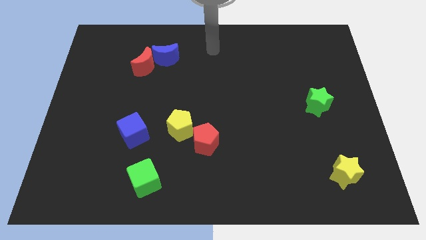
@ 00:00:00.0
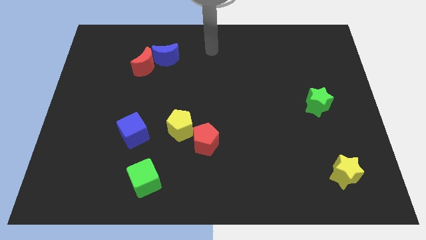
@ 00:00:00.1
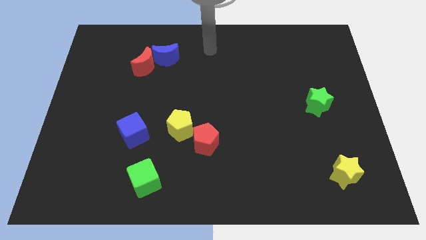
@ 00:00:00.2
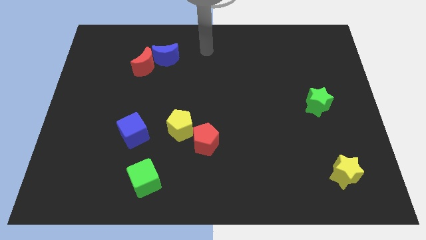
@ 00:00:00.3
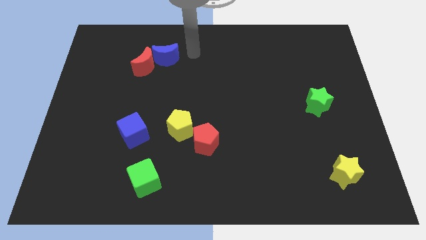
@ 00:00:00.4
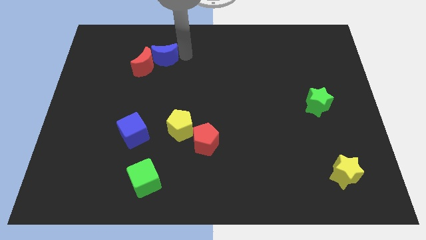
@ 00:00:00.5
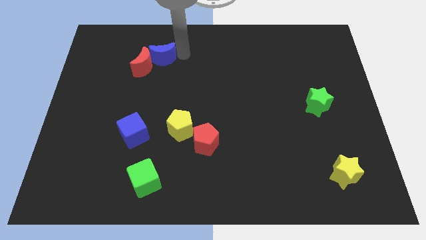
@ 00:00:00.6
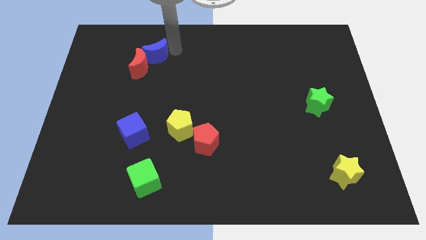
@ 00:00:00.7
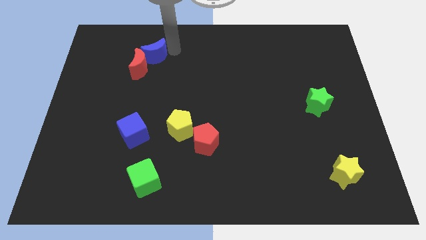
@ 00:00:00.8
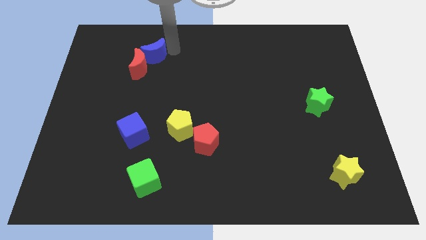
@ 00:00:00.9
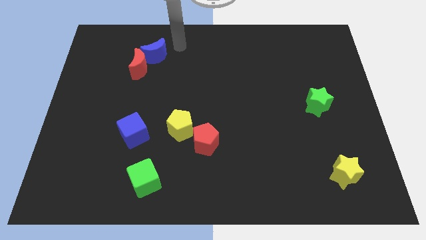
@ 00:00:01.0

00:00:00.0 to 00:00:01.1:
push the blue crescent into the red crescent

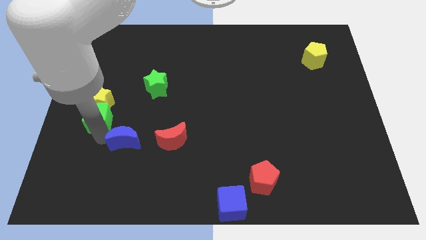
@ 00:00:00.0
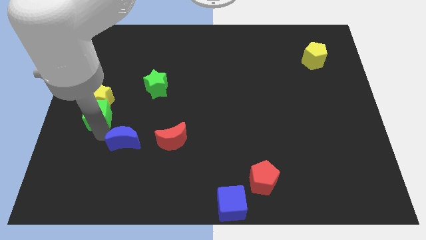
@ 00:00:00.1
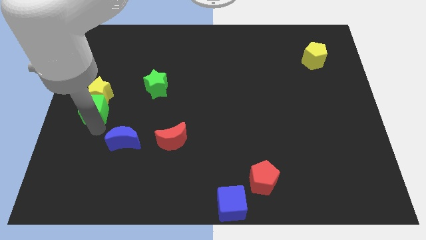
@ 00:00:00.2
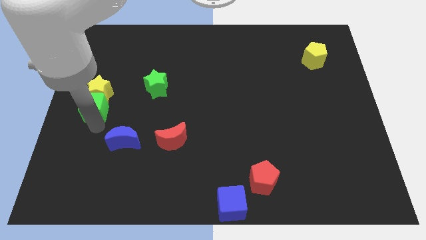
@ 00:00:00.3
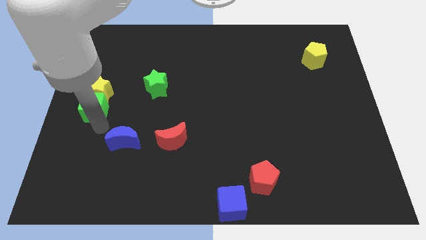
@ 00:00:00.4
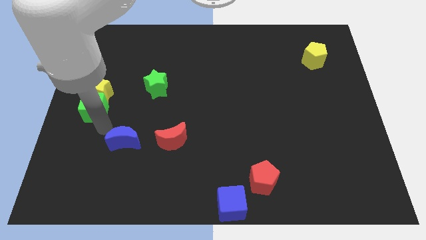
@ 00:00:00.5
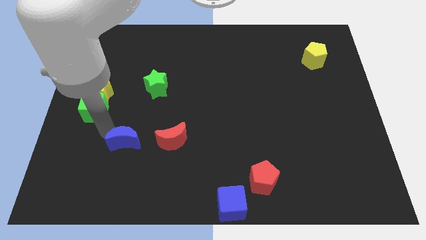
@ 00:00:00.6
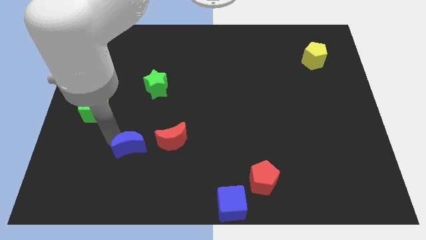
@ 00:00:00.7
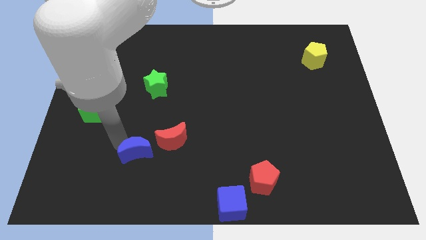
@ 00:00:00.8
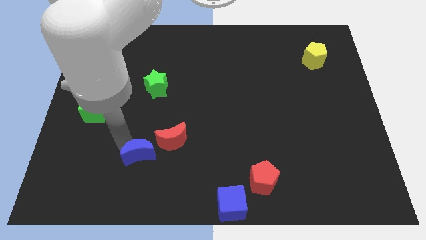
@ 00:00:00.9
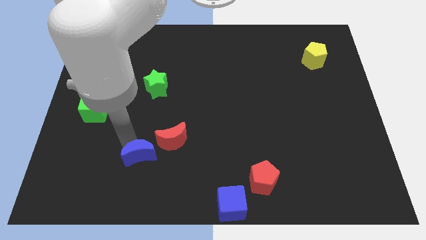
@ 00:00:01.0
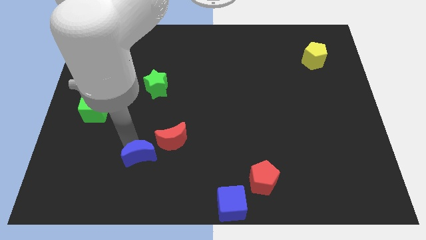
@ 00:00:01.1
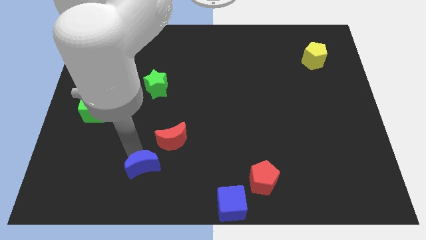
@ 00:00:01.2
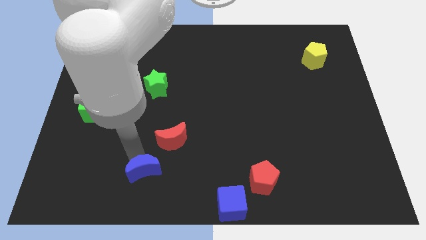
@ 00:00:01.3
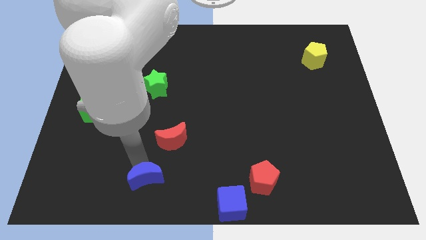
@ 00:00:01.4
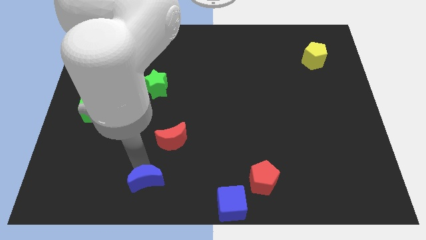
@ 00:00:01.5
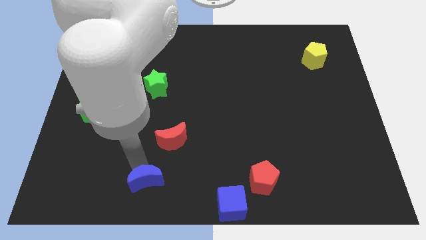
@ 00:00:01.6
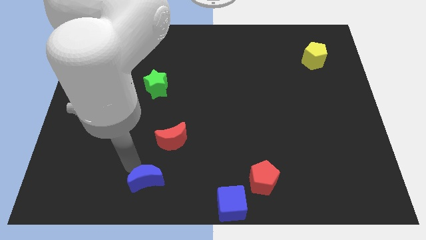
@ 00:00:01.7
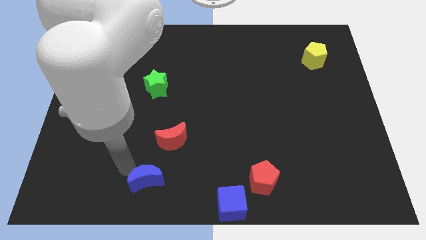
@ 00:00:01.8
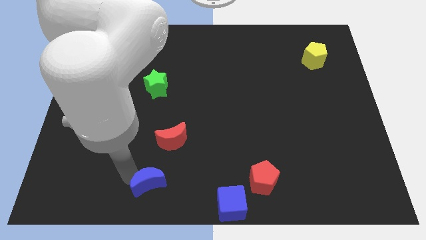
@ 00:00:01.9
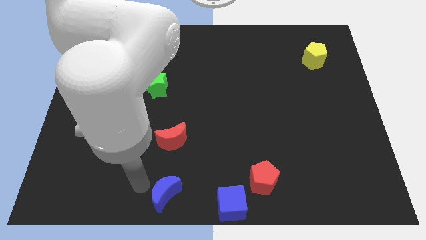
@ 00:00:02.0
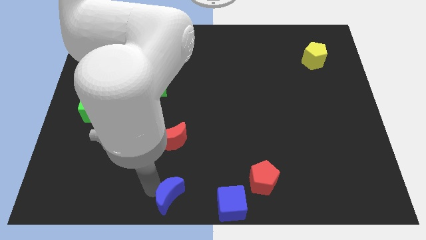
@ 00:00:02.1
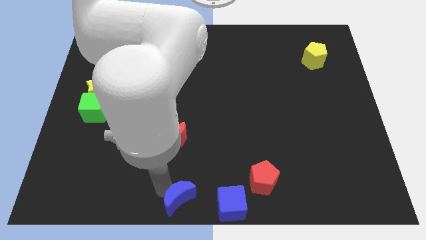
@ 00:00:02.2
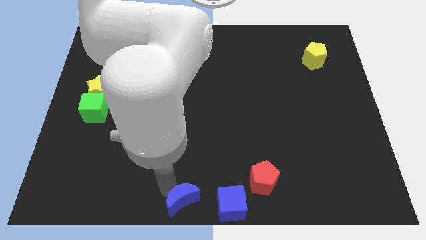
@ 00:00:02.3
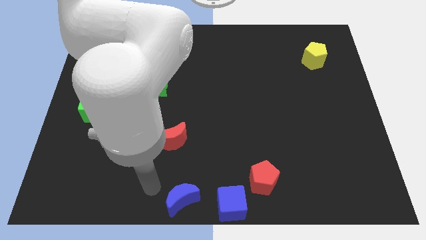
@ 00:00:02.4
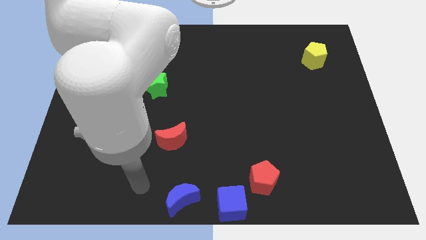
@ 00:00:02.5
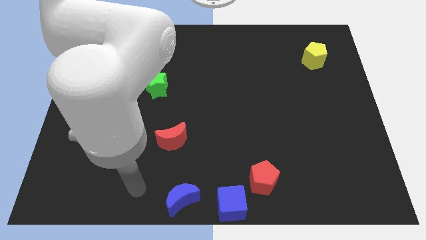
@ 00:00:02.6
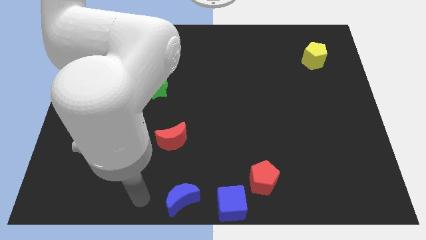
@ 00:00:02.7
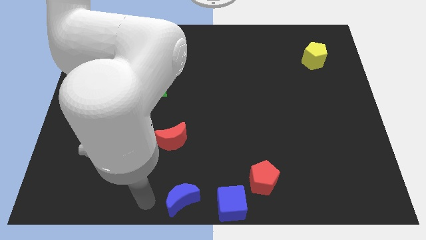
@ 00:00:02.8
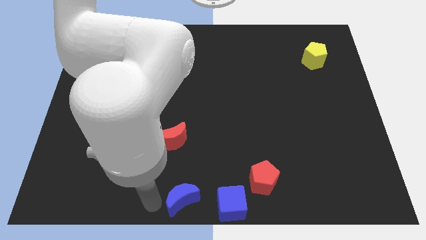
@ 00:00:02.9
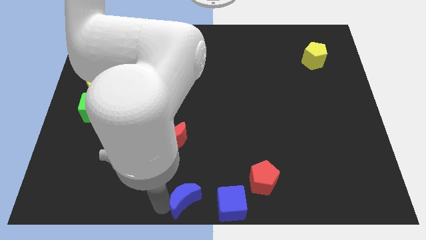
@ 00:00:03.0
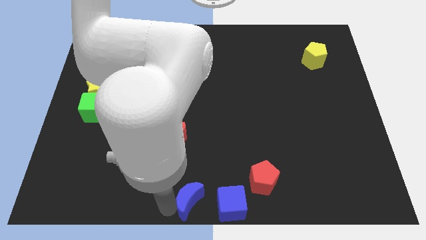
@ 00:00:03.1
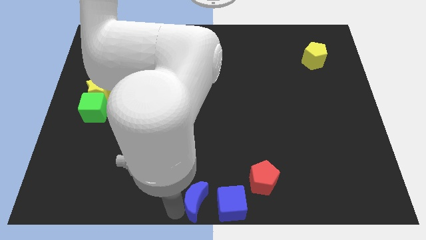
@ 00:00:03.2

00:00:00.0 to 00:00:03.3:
move the blue crescent to the left of the blue cube

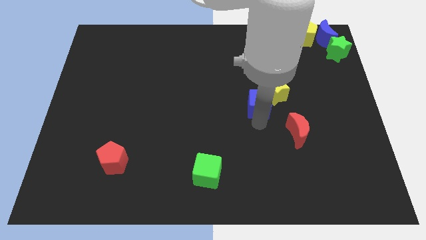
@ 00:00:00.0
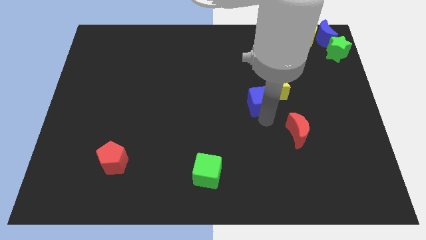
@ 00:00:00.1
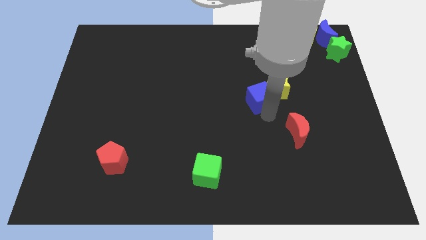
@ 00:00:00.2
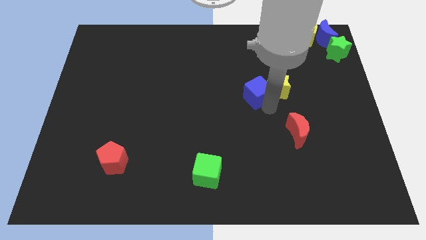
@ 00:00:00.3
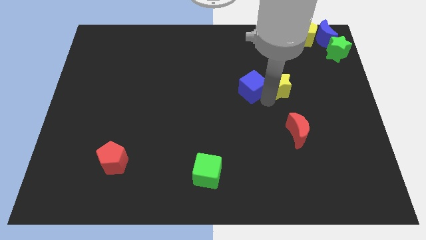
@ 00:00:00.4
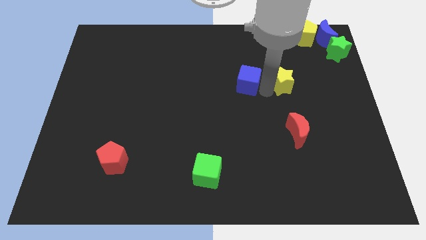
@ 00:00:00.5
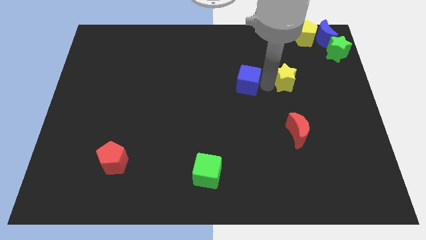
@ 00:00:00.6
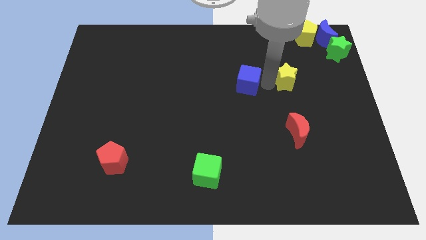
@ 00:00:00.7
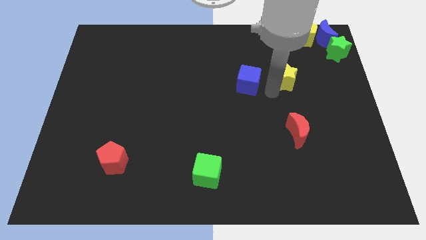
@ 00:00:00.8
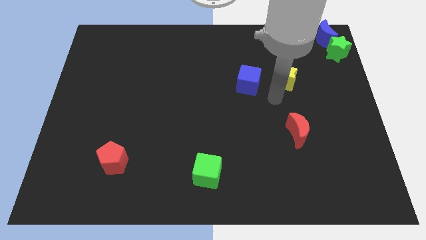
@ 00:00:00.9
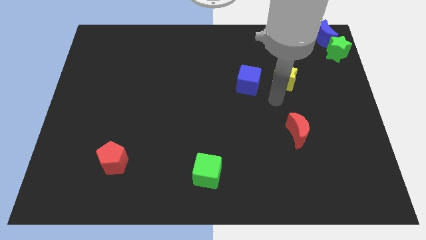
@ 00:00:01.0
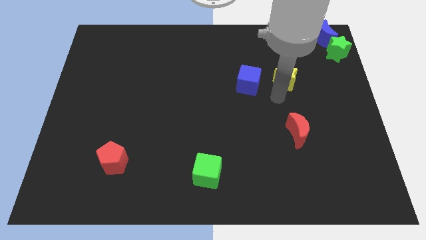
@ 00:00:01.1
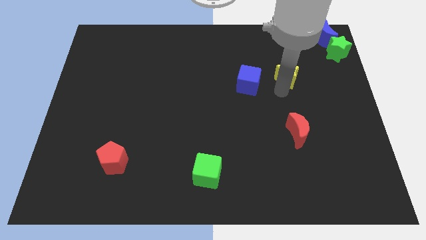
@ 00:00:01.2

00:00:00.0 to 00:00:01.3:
separate the blue cube and yellow star

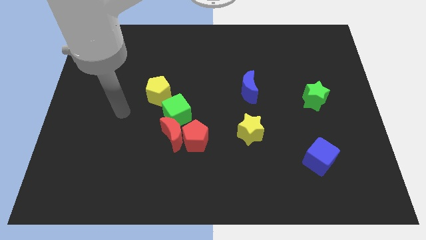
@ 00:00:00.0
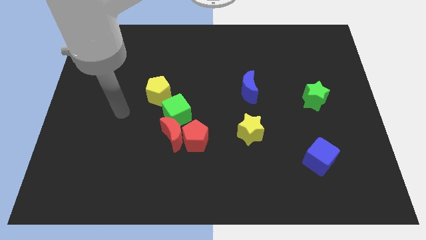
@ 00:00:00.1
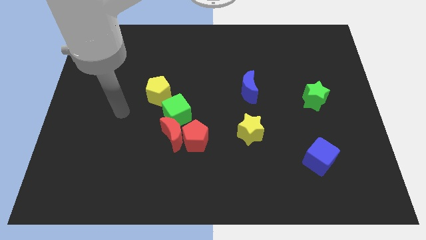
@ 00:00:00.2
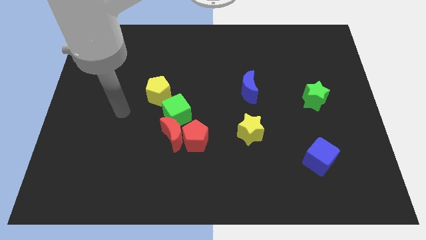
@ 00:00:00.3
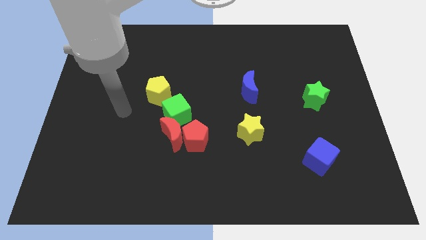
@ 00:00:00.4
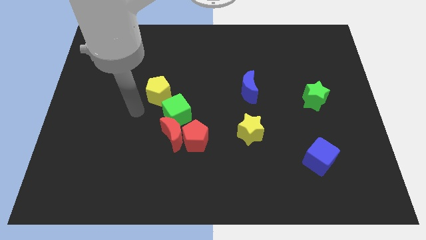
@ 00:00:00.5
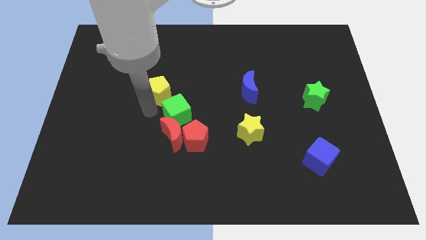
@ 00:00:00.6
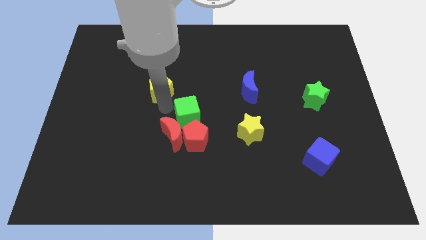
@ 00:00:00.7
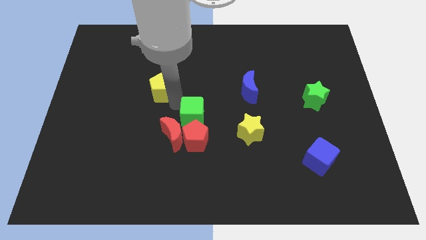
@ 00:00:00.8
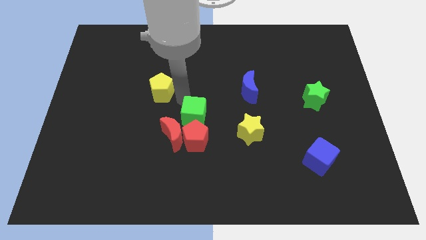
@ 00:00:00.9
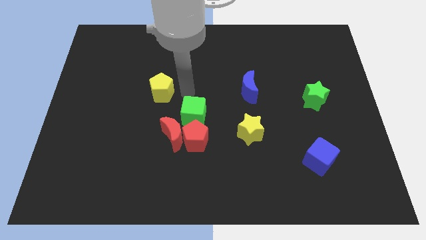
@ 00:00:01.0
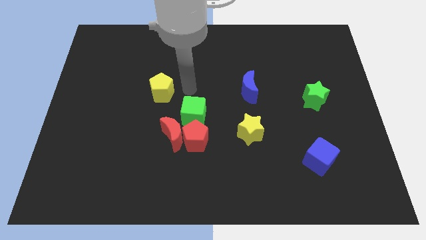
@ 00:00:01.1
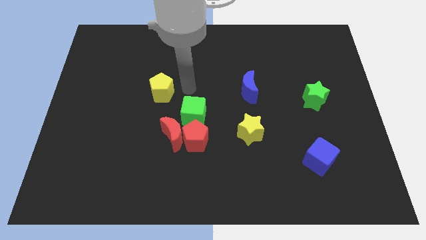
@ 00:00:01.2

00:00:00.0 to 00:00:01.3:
push the green cube to the top of the red pentagon

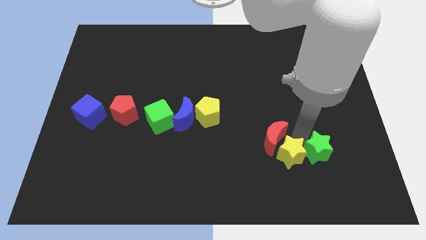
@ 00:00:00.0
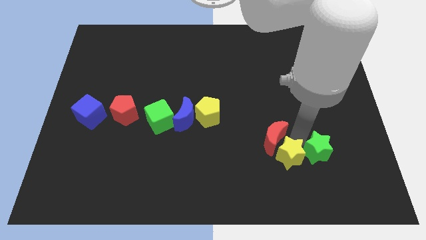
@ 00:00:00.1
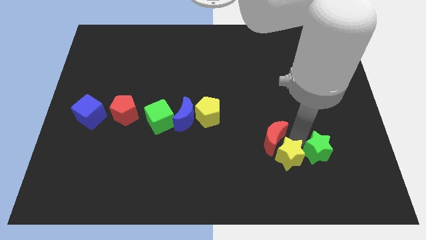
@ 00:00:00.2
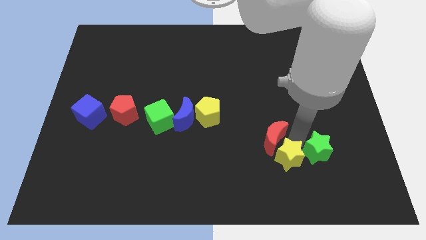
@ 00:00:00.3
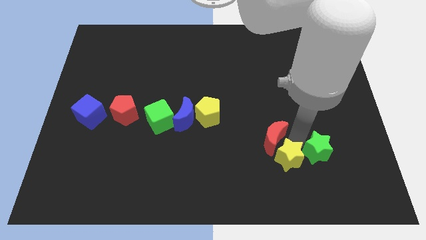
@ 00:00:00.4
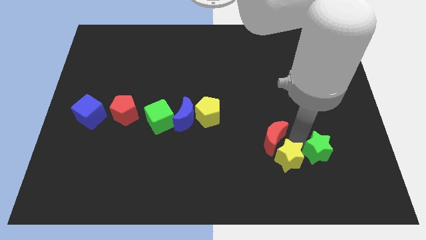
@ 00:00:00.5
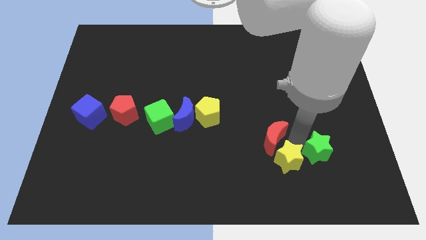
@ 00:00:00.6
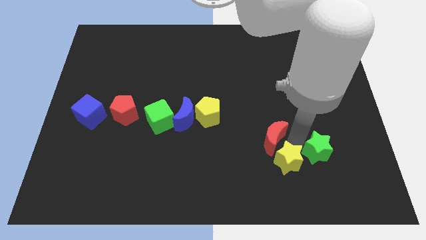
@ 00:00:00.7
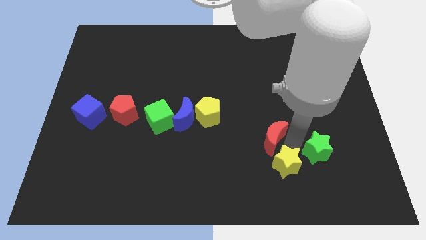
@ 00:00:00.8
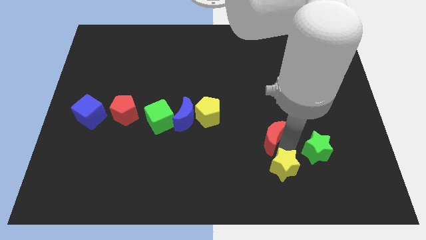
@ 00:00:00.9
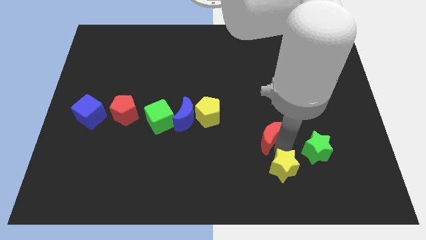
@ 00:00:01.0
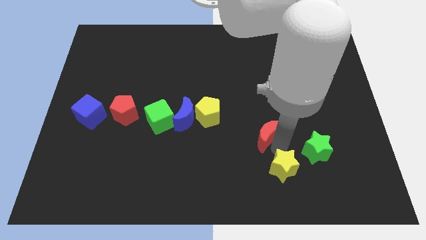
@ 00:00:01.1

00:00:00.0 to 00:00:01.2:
push yellow star slightly towards the down

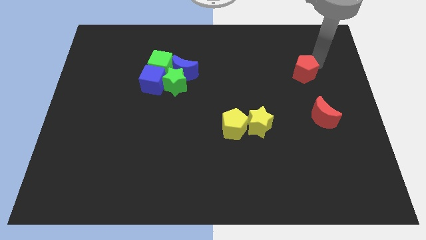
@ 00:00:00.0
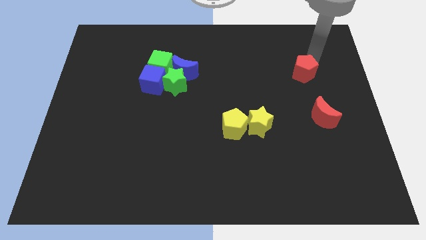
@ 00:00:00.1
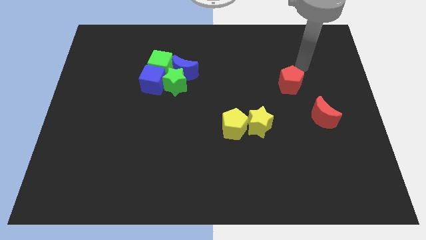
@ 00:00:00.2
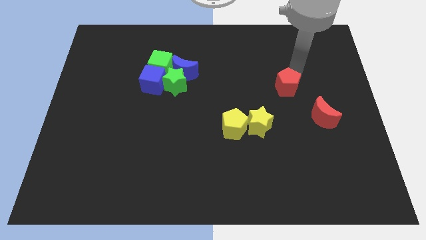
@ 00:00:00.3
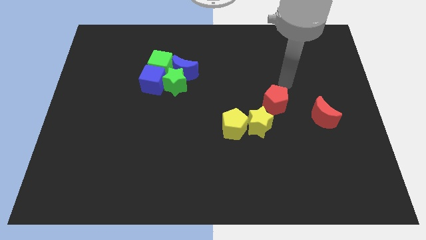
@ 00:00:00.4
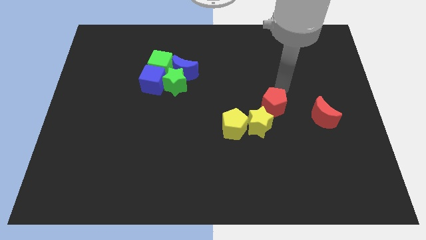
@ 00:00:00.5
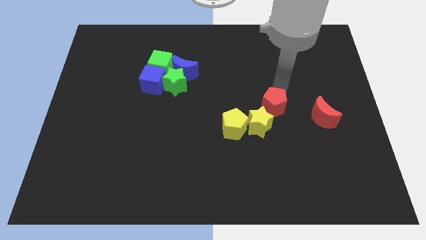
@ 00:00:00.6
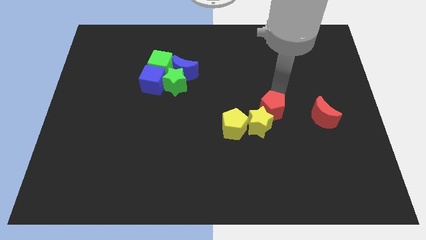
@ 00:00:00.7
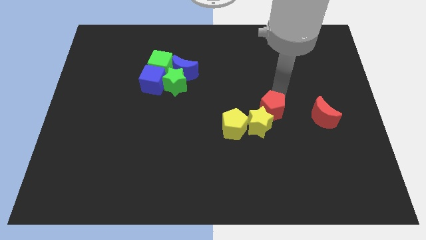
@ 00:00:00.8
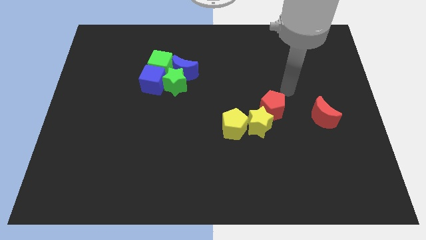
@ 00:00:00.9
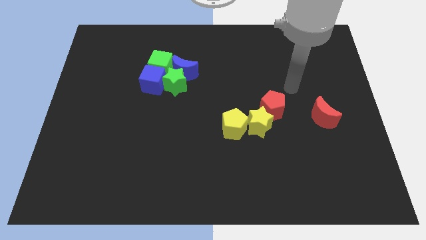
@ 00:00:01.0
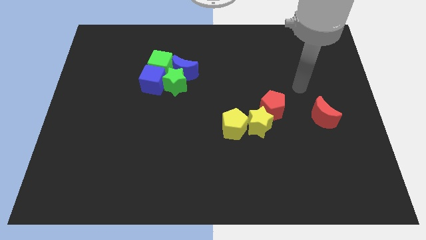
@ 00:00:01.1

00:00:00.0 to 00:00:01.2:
push the red pentagon diagonally to the top right of the yellow star
